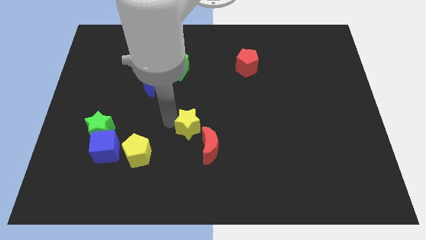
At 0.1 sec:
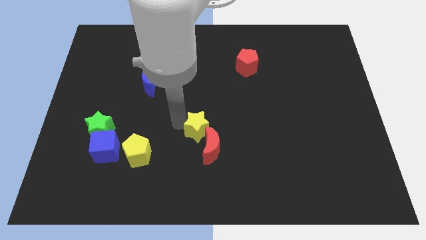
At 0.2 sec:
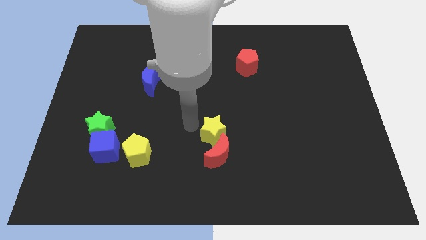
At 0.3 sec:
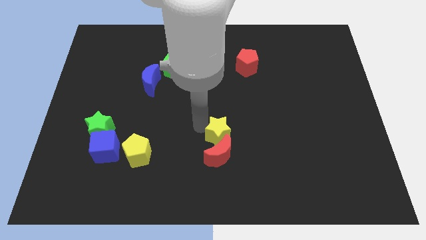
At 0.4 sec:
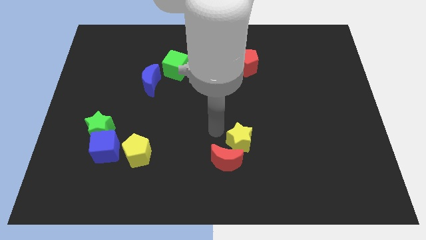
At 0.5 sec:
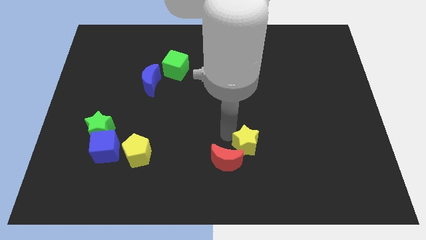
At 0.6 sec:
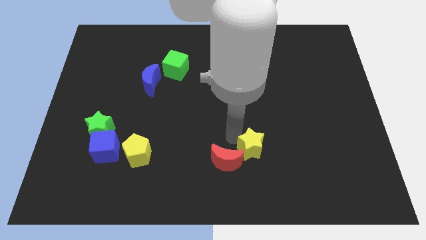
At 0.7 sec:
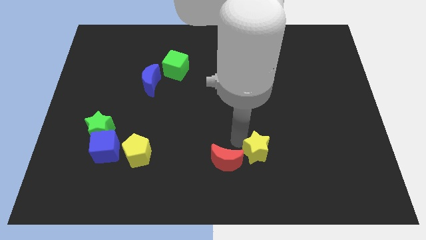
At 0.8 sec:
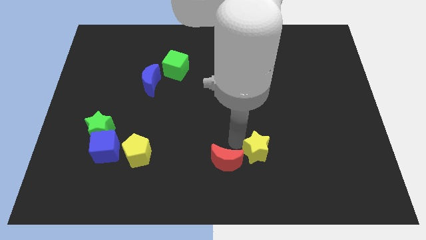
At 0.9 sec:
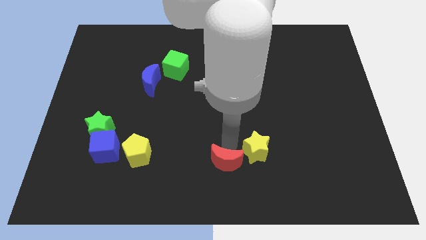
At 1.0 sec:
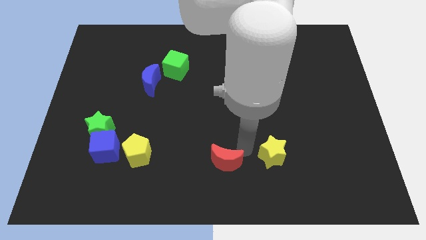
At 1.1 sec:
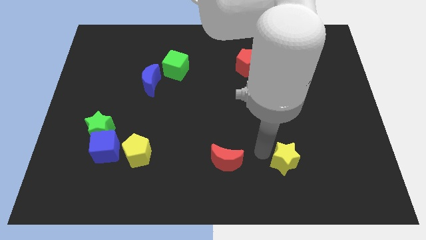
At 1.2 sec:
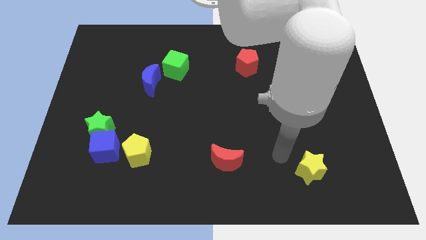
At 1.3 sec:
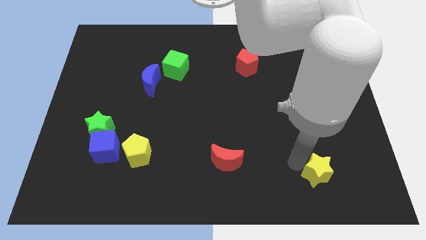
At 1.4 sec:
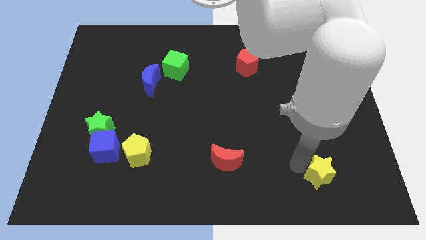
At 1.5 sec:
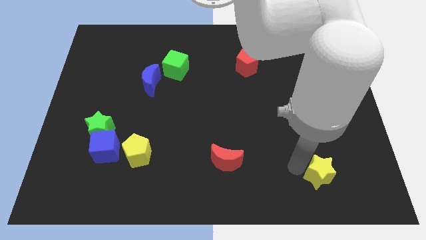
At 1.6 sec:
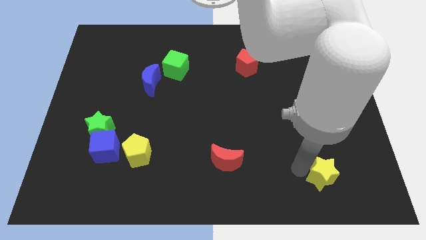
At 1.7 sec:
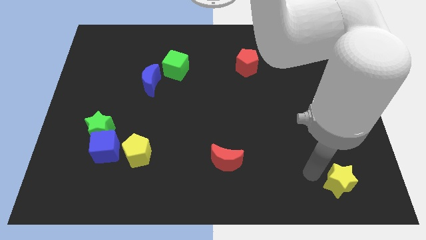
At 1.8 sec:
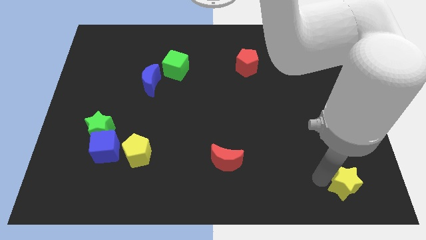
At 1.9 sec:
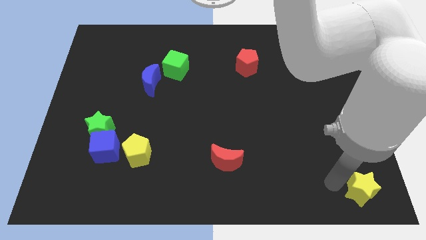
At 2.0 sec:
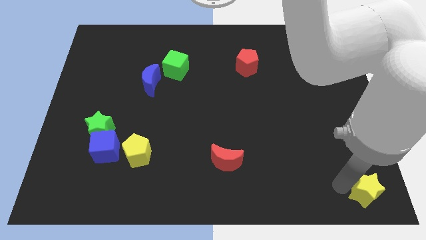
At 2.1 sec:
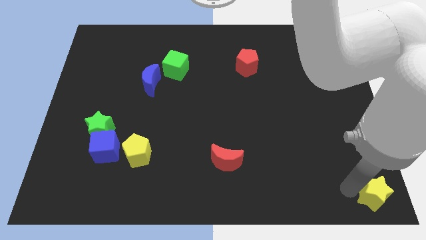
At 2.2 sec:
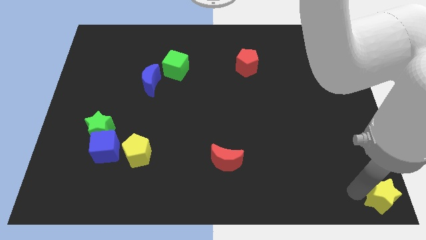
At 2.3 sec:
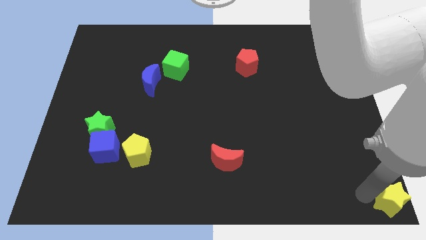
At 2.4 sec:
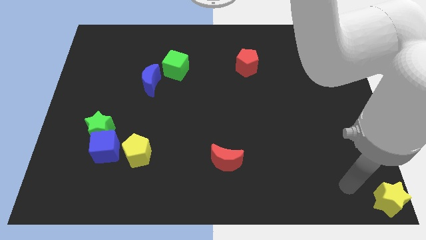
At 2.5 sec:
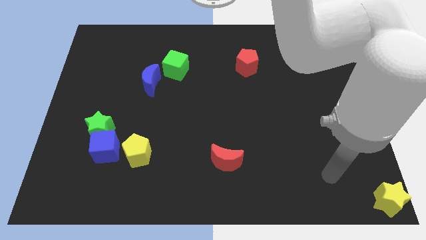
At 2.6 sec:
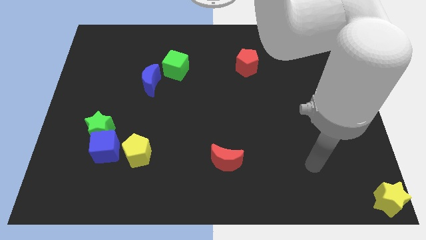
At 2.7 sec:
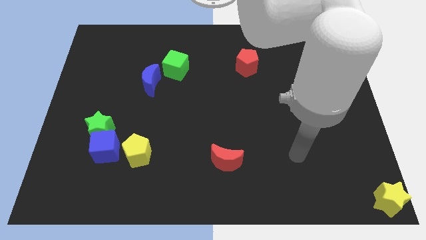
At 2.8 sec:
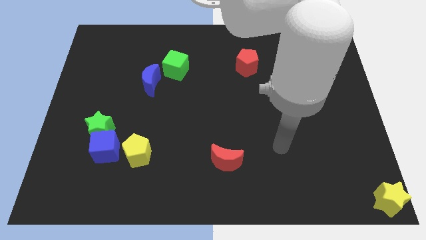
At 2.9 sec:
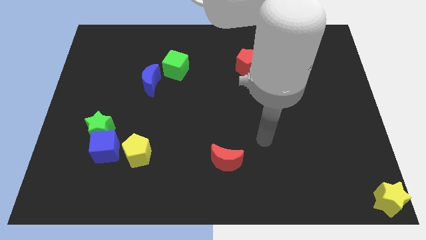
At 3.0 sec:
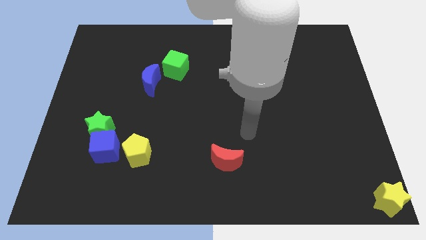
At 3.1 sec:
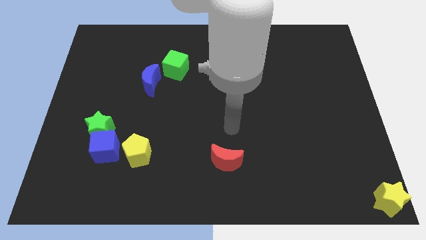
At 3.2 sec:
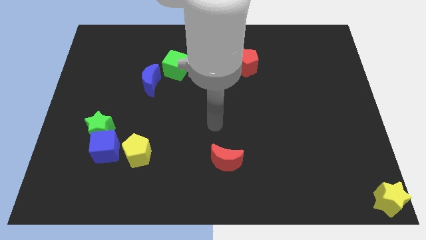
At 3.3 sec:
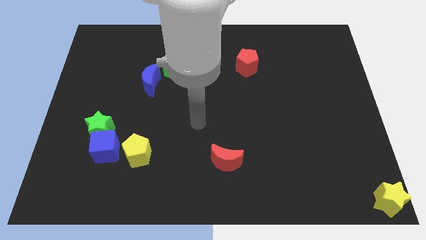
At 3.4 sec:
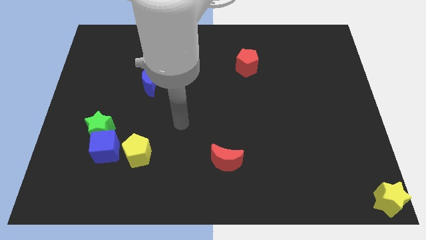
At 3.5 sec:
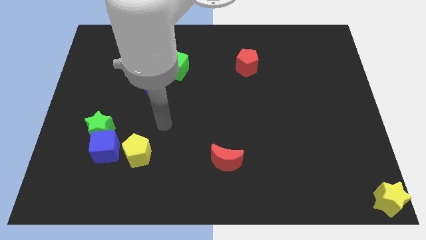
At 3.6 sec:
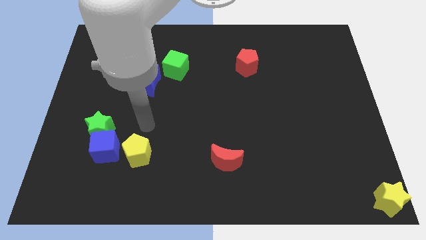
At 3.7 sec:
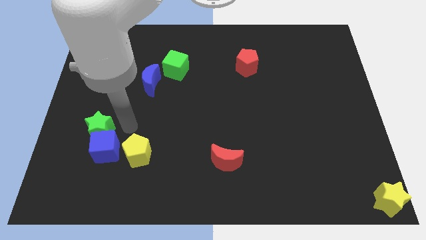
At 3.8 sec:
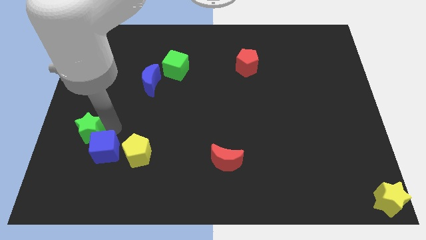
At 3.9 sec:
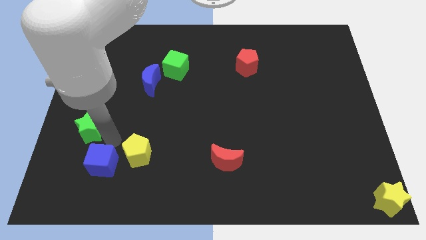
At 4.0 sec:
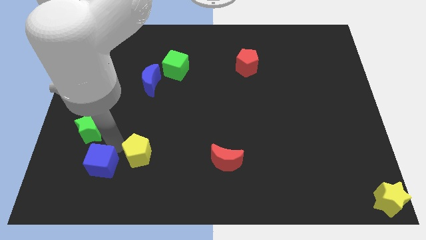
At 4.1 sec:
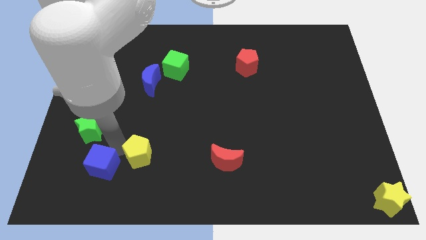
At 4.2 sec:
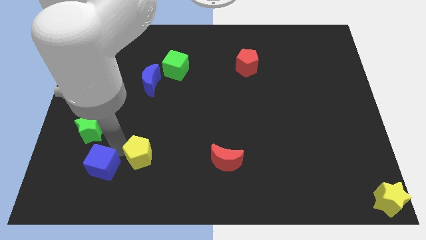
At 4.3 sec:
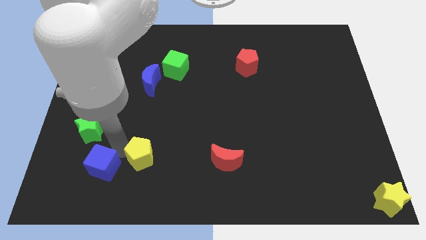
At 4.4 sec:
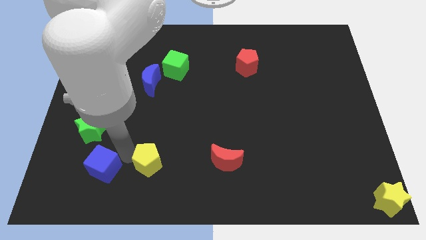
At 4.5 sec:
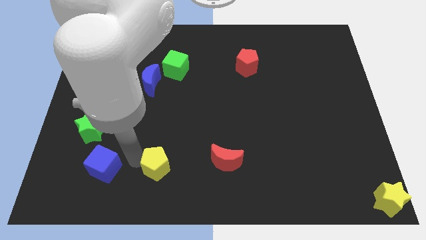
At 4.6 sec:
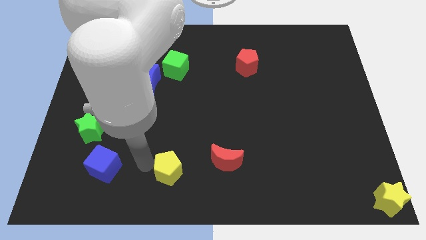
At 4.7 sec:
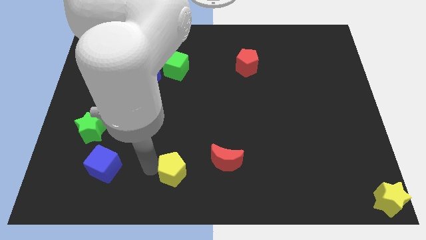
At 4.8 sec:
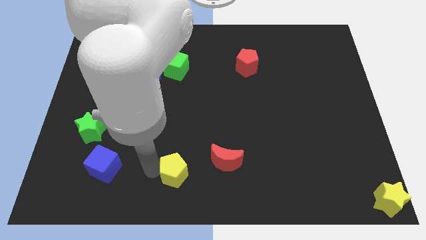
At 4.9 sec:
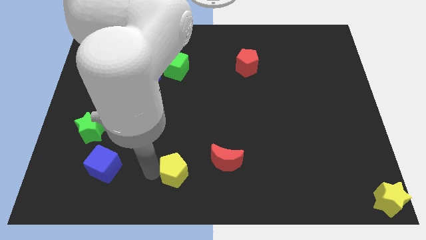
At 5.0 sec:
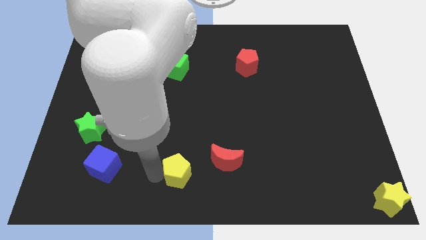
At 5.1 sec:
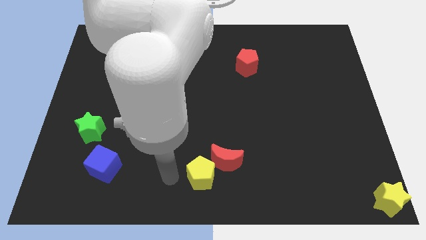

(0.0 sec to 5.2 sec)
move the yellow star into the red crescent

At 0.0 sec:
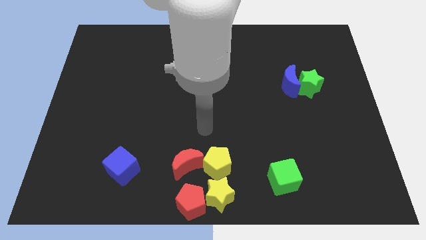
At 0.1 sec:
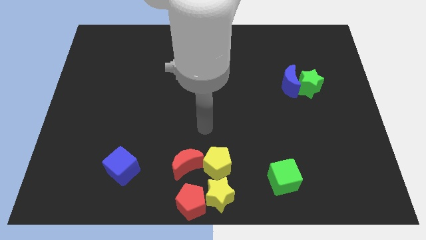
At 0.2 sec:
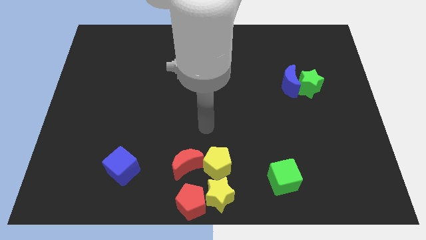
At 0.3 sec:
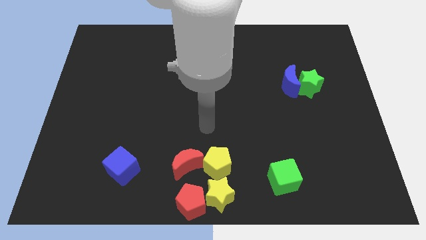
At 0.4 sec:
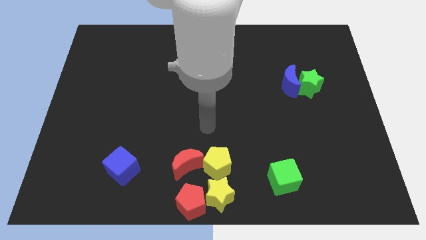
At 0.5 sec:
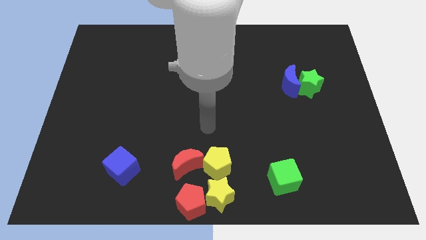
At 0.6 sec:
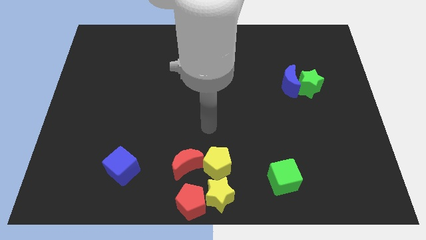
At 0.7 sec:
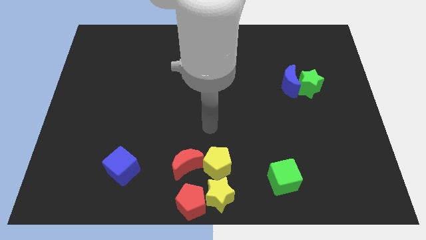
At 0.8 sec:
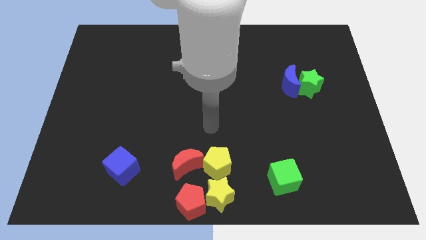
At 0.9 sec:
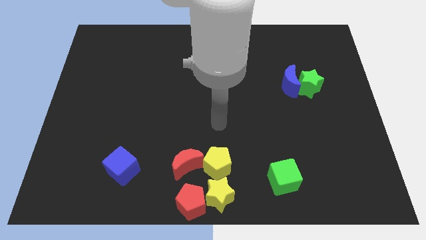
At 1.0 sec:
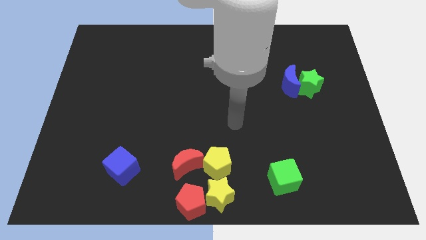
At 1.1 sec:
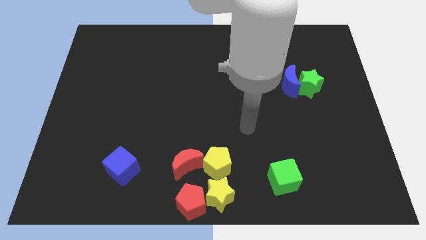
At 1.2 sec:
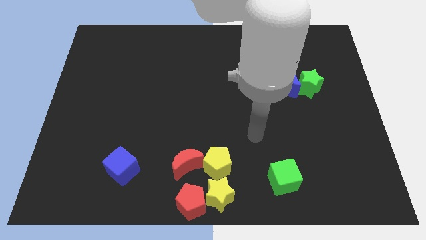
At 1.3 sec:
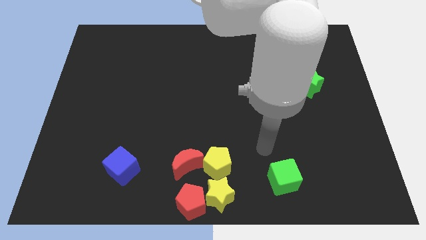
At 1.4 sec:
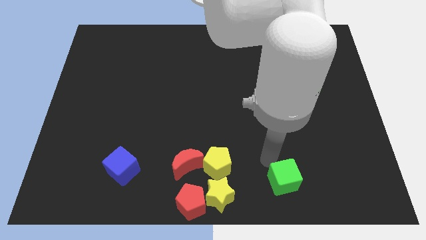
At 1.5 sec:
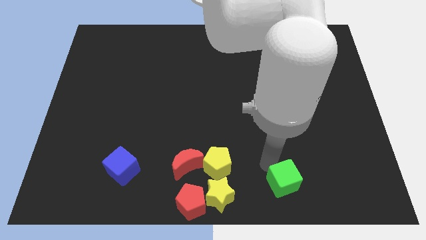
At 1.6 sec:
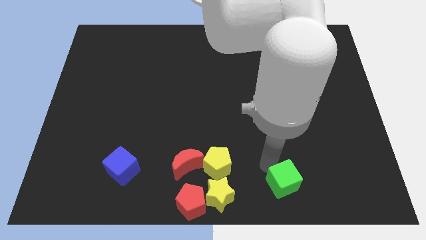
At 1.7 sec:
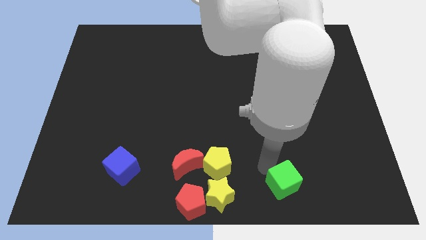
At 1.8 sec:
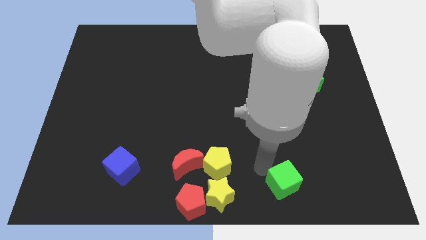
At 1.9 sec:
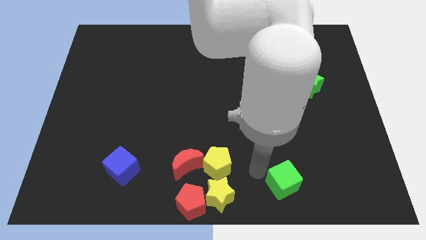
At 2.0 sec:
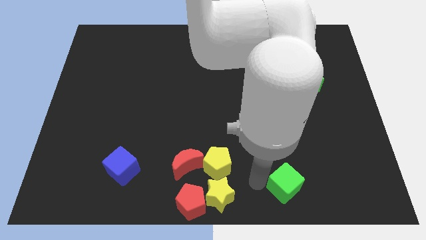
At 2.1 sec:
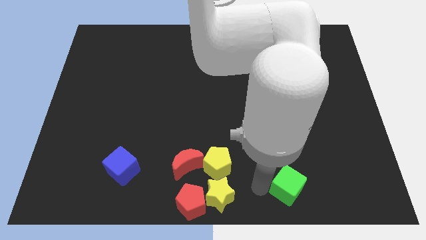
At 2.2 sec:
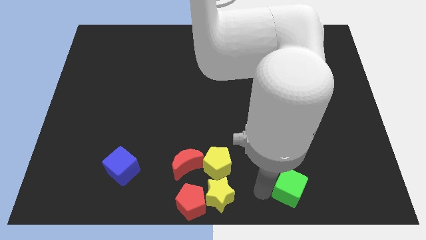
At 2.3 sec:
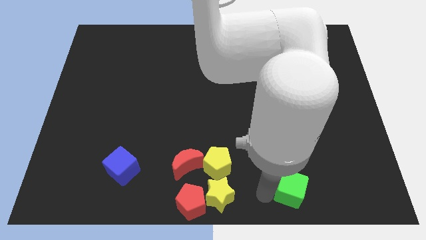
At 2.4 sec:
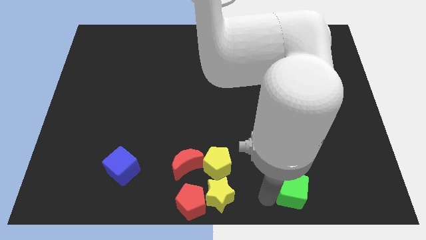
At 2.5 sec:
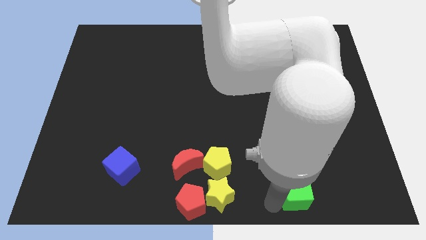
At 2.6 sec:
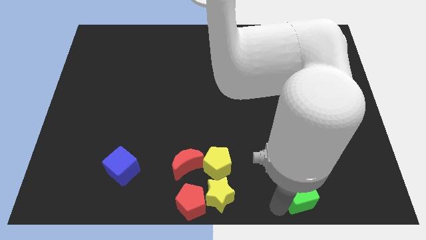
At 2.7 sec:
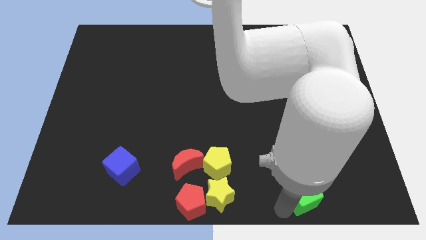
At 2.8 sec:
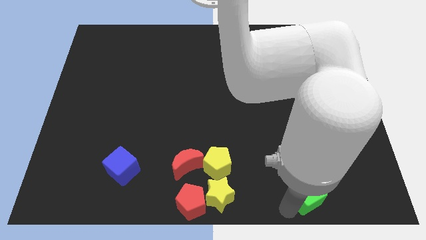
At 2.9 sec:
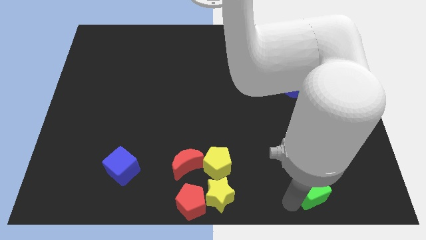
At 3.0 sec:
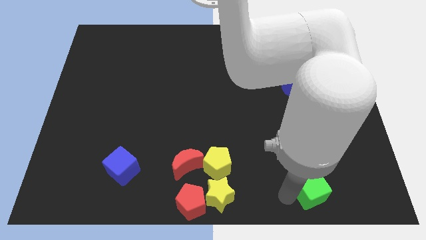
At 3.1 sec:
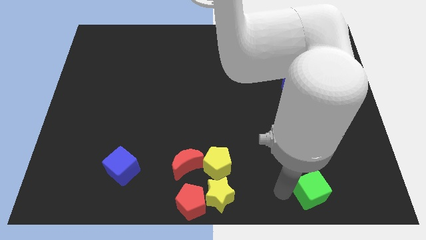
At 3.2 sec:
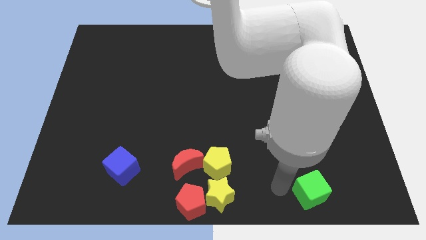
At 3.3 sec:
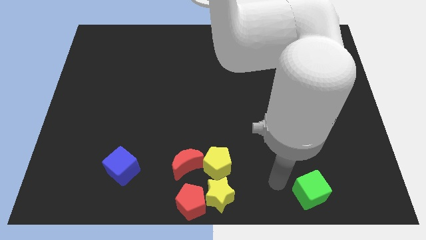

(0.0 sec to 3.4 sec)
place green cube to the right of yellow star

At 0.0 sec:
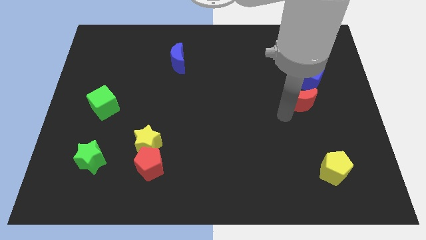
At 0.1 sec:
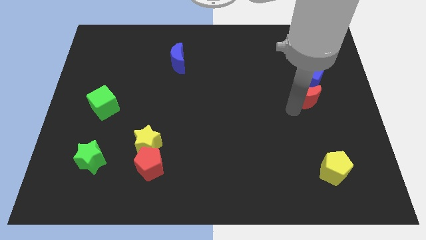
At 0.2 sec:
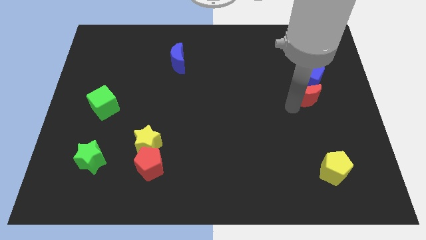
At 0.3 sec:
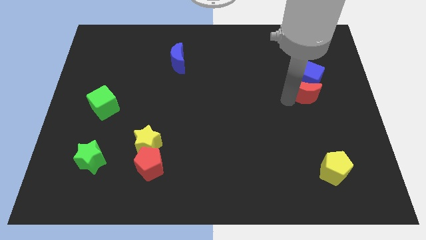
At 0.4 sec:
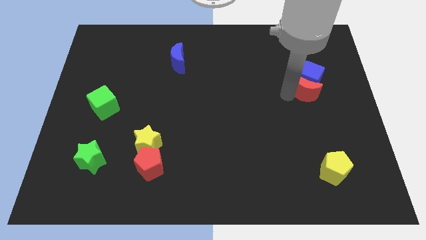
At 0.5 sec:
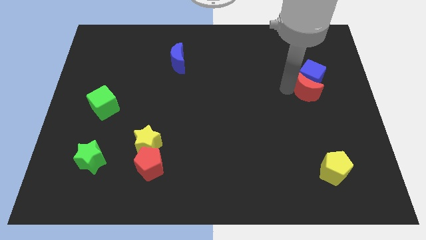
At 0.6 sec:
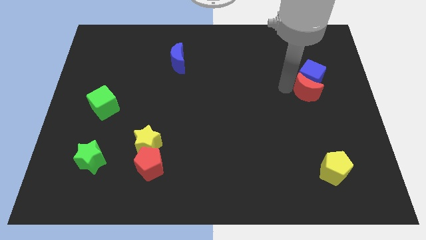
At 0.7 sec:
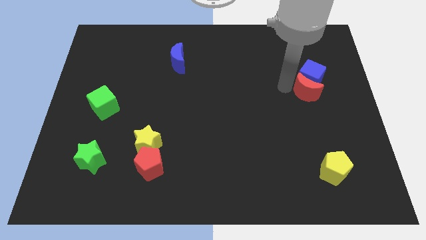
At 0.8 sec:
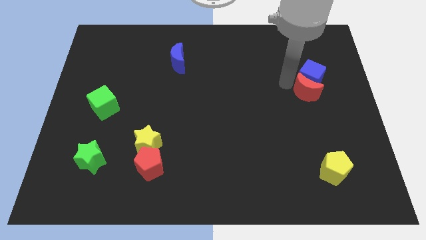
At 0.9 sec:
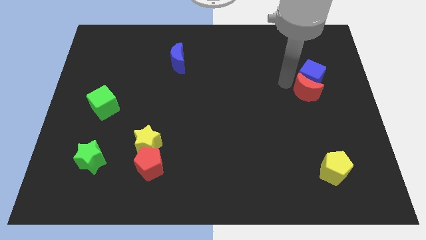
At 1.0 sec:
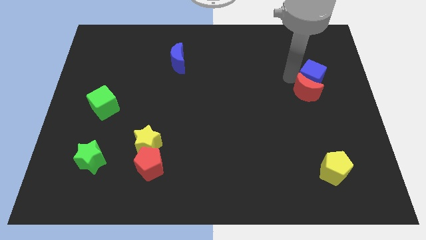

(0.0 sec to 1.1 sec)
push red moon in to blue cube
